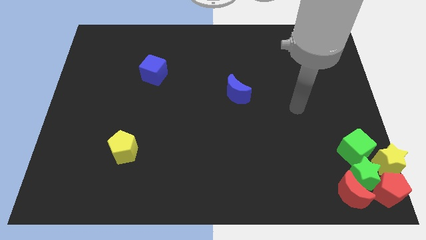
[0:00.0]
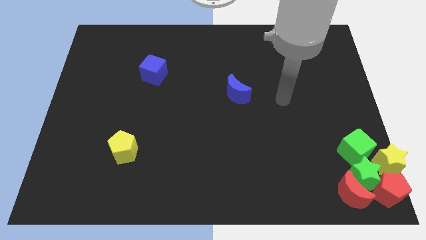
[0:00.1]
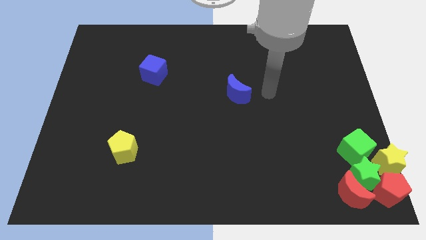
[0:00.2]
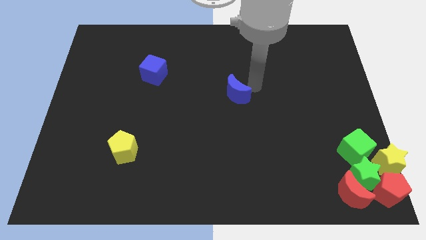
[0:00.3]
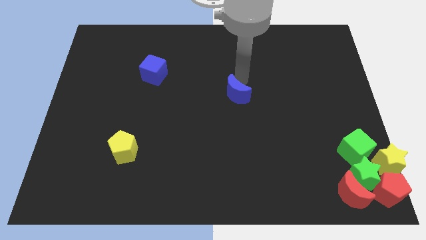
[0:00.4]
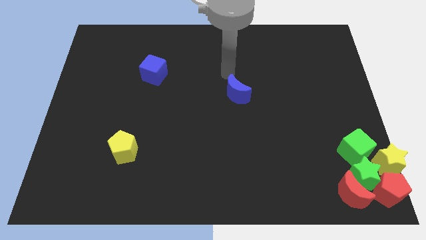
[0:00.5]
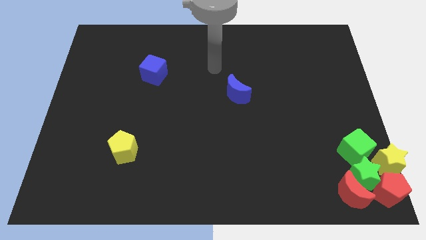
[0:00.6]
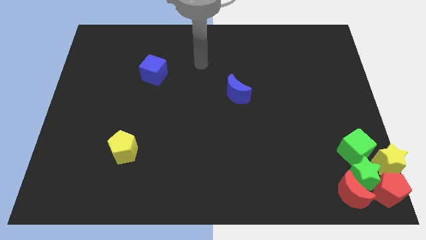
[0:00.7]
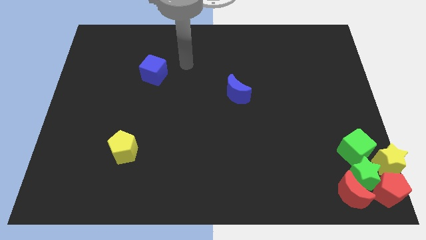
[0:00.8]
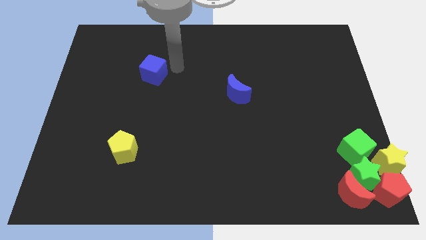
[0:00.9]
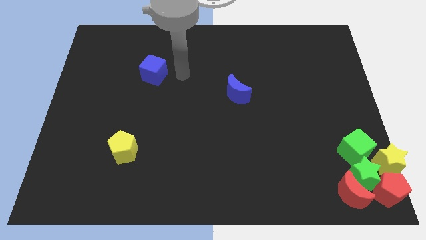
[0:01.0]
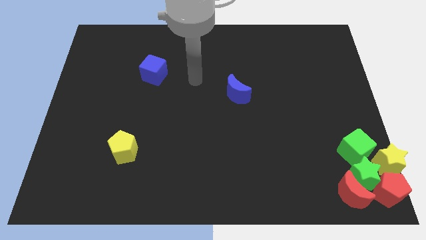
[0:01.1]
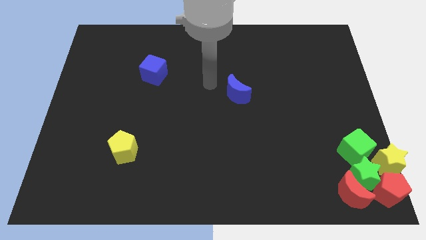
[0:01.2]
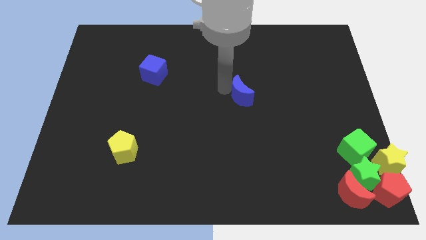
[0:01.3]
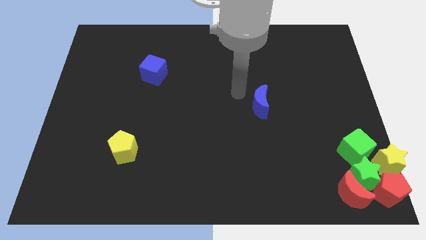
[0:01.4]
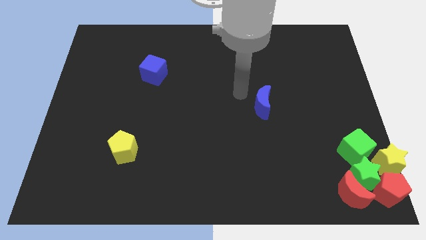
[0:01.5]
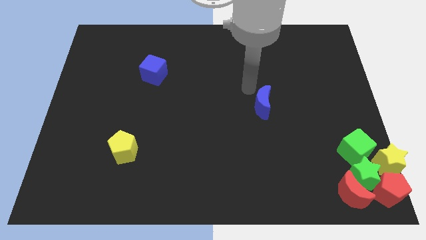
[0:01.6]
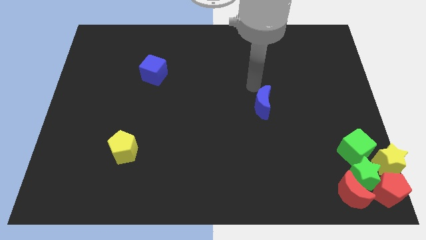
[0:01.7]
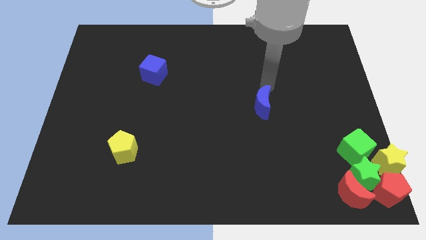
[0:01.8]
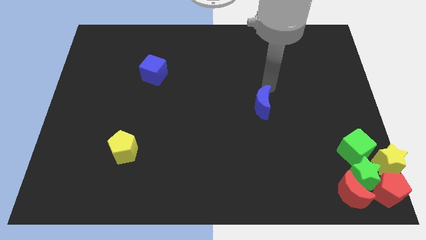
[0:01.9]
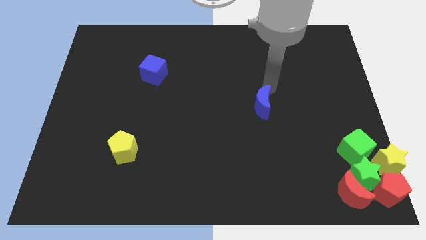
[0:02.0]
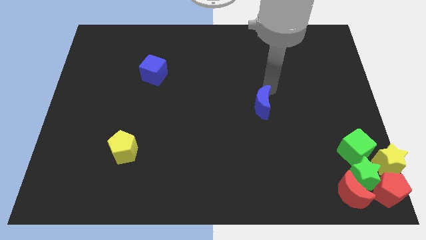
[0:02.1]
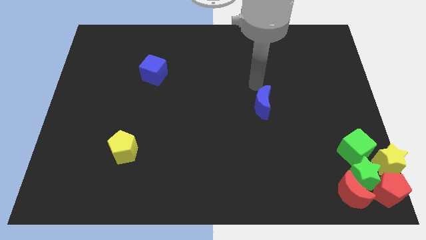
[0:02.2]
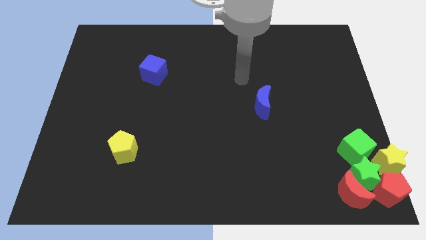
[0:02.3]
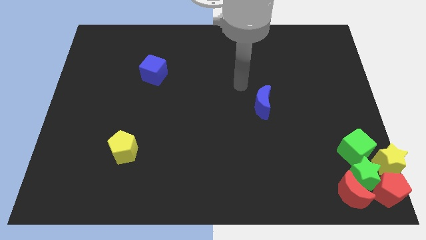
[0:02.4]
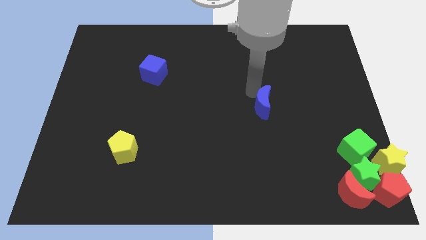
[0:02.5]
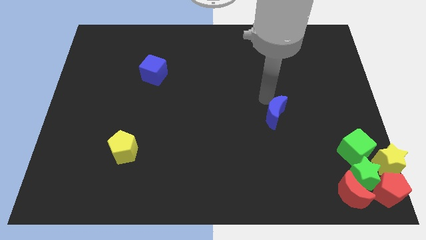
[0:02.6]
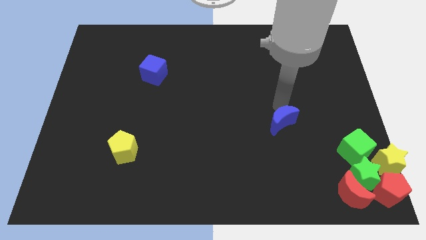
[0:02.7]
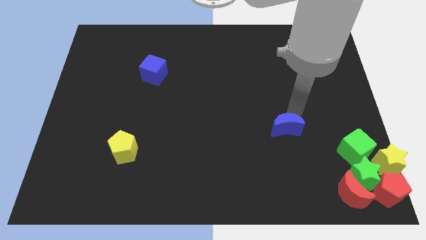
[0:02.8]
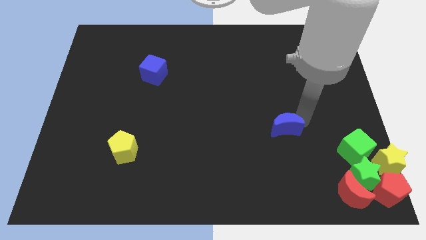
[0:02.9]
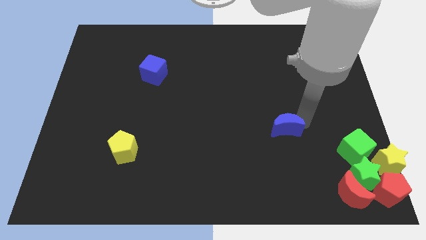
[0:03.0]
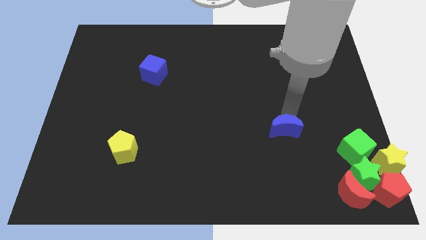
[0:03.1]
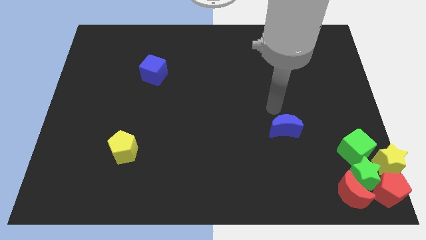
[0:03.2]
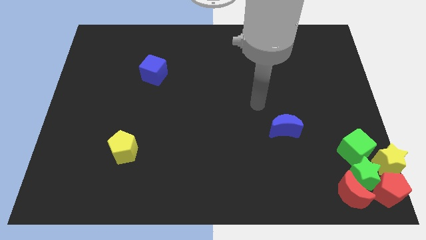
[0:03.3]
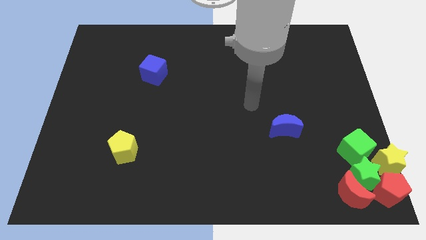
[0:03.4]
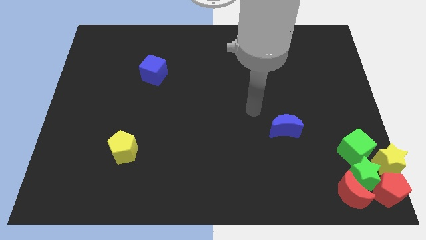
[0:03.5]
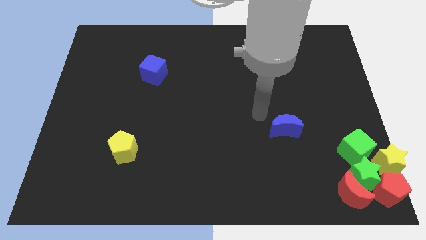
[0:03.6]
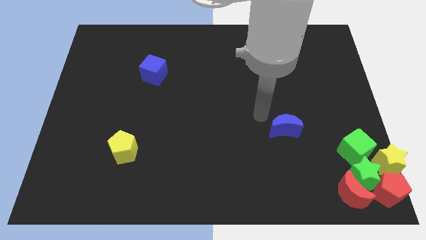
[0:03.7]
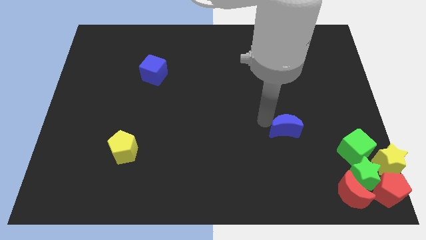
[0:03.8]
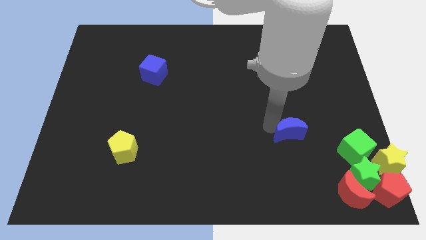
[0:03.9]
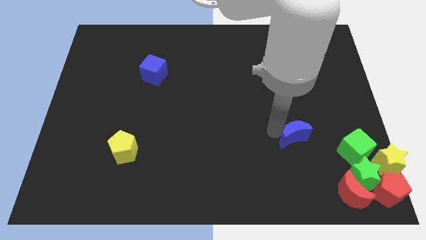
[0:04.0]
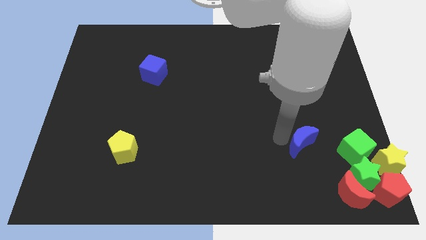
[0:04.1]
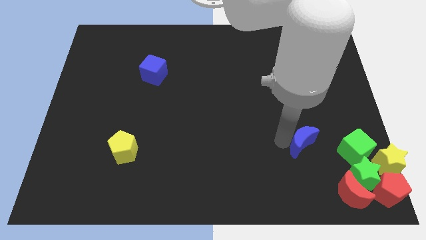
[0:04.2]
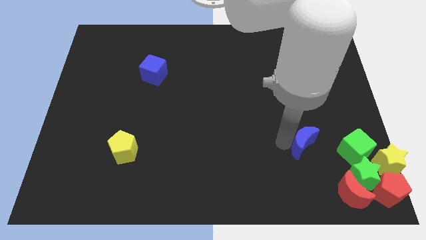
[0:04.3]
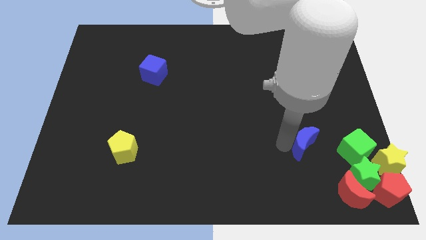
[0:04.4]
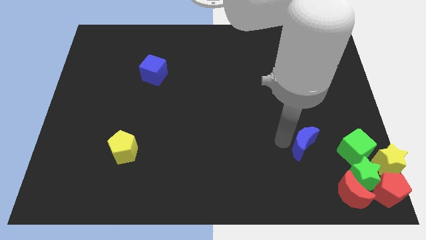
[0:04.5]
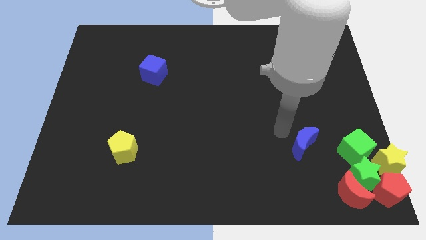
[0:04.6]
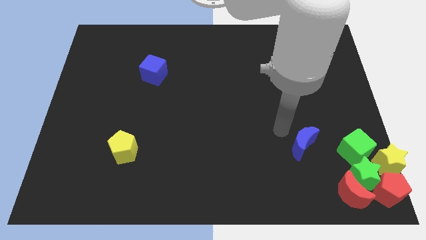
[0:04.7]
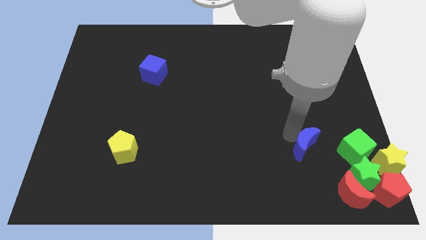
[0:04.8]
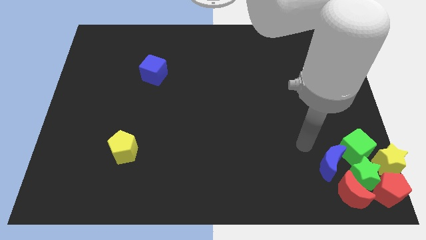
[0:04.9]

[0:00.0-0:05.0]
push the blue moon towards the group of blocks

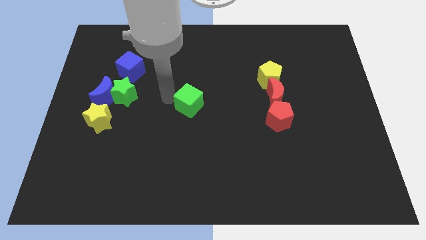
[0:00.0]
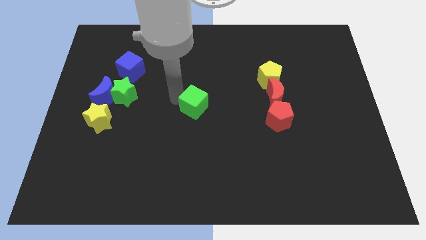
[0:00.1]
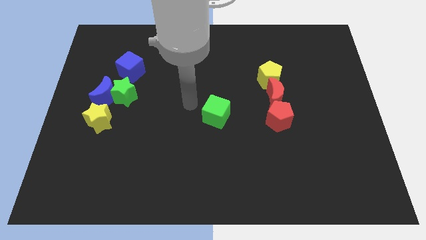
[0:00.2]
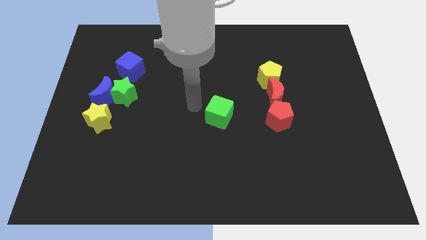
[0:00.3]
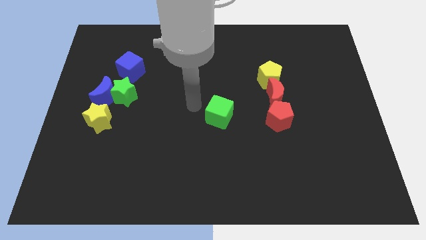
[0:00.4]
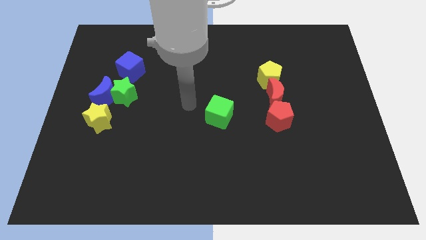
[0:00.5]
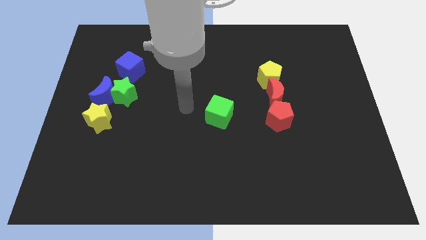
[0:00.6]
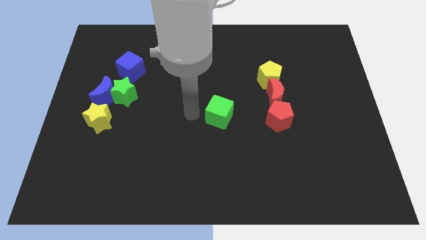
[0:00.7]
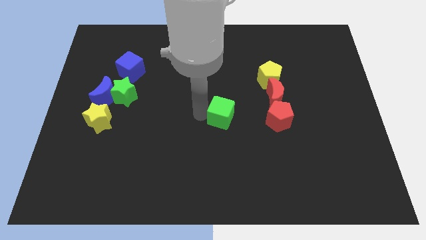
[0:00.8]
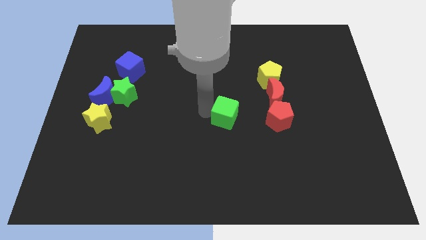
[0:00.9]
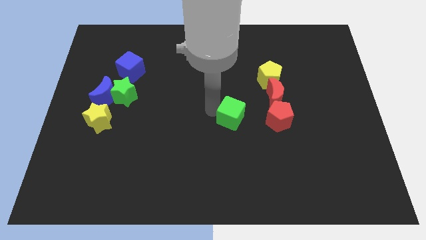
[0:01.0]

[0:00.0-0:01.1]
slide green cube to the left of red pentagon

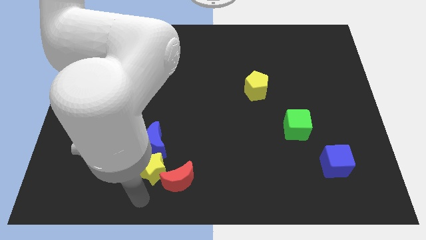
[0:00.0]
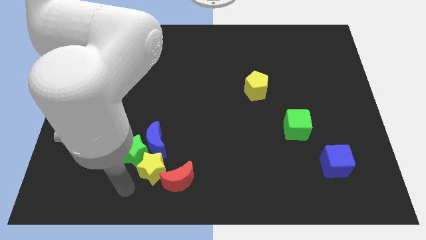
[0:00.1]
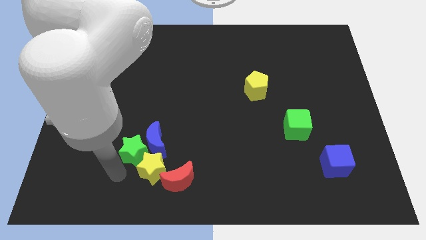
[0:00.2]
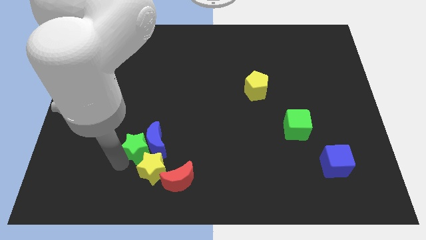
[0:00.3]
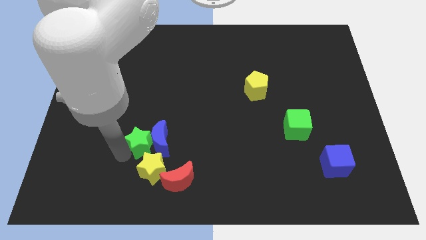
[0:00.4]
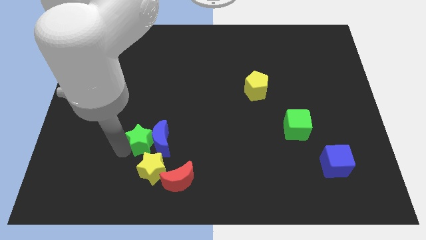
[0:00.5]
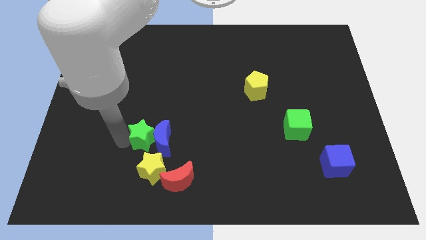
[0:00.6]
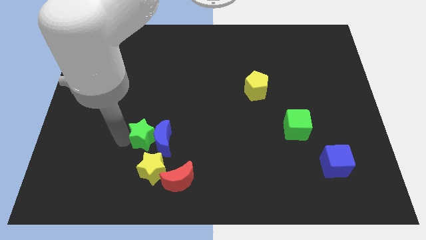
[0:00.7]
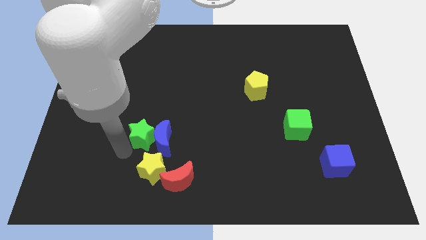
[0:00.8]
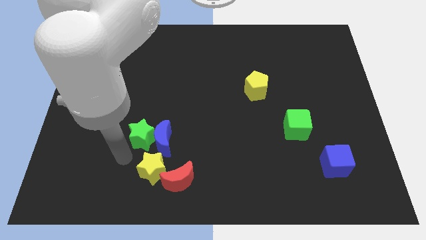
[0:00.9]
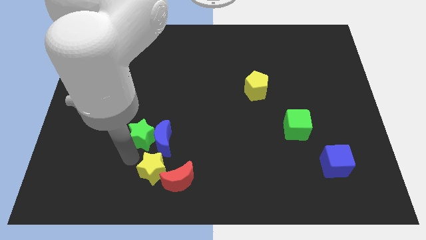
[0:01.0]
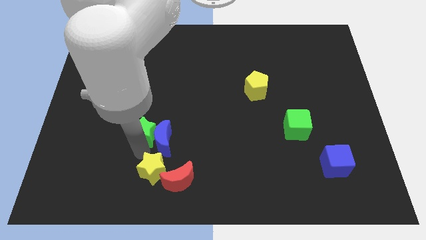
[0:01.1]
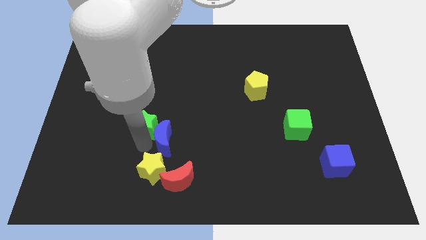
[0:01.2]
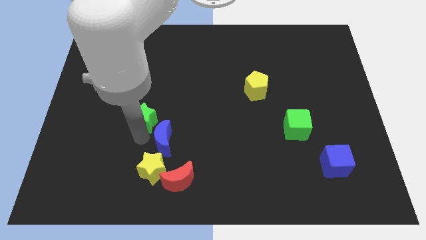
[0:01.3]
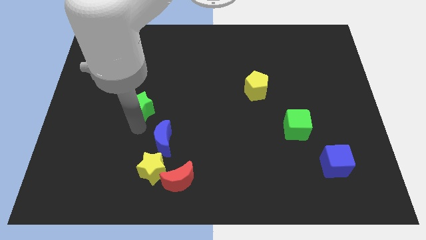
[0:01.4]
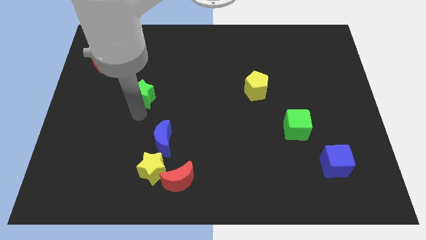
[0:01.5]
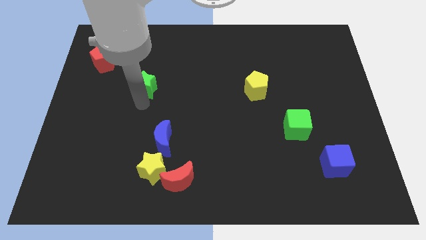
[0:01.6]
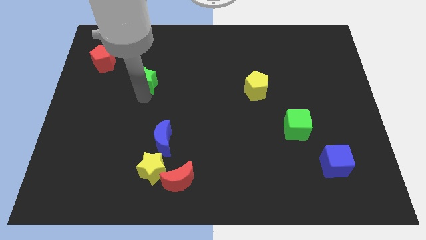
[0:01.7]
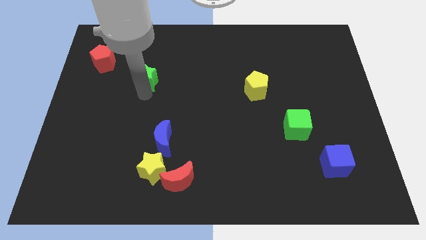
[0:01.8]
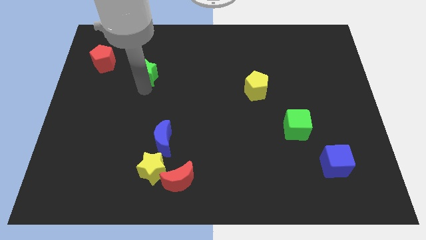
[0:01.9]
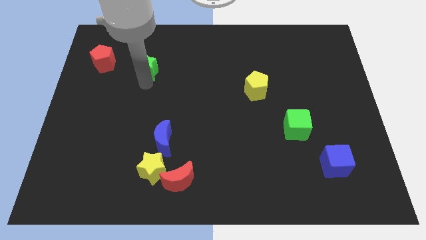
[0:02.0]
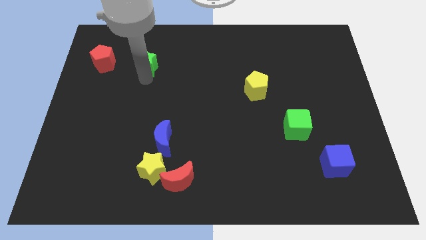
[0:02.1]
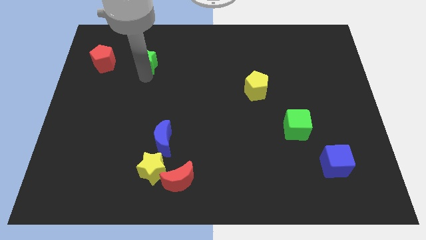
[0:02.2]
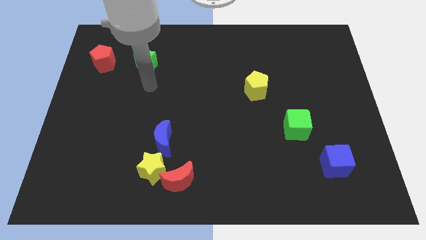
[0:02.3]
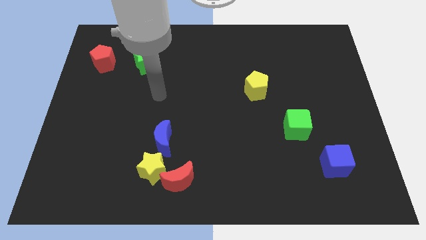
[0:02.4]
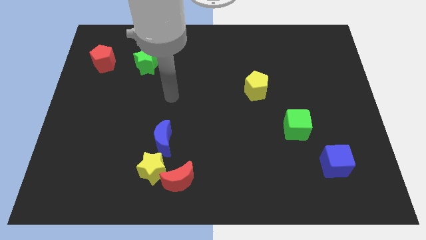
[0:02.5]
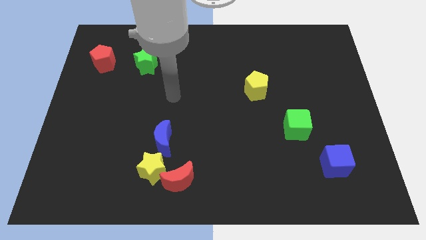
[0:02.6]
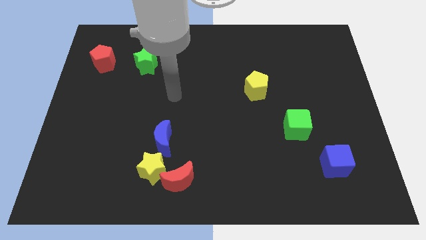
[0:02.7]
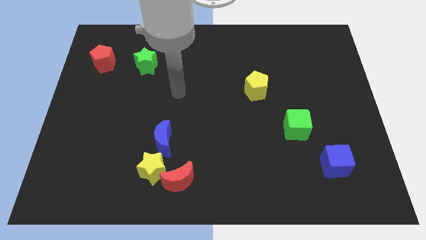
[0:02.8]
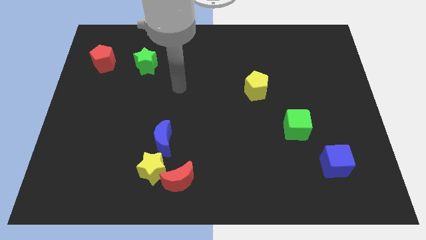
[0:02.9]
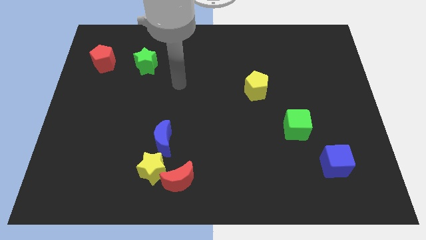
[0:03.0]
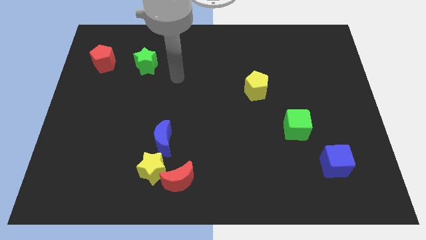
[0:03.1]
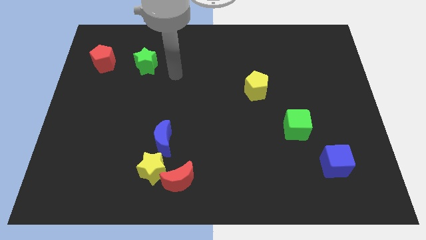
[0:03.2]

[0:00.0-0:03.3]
move the green star to the right of the red pentagon
